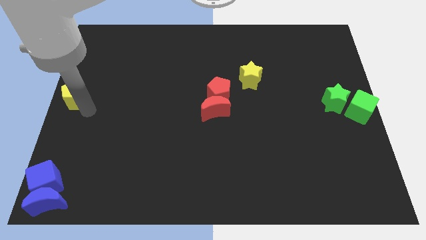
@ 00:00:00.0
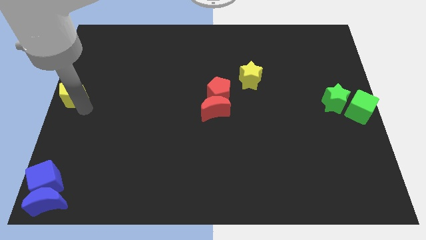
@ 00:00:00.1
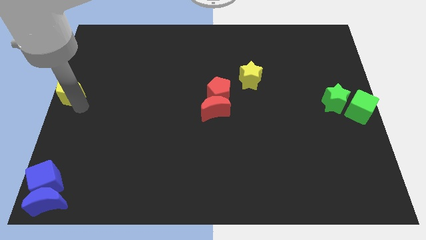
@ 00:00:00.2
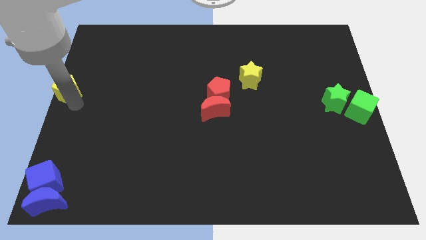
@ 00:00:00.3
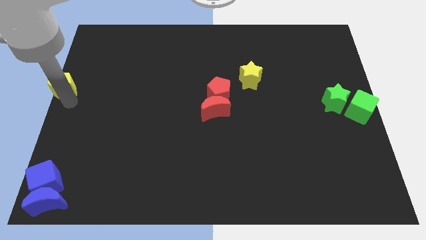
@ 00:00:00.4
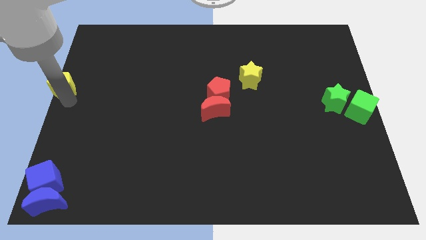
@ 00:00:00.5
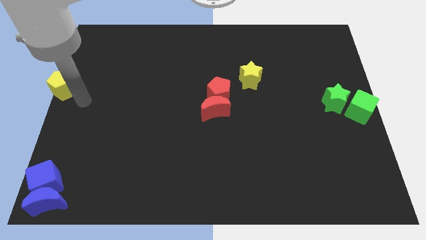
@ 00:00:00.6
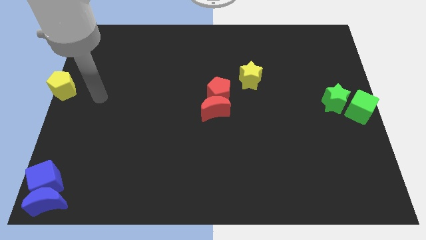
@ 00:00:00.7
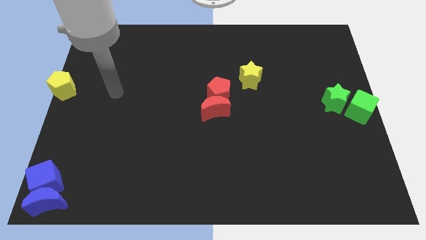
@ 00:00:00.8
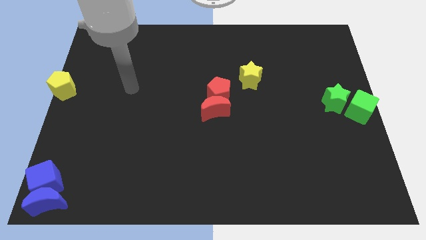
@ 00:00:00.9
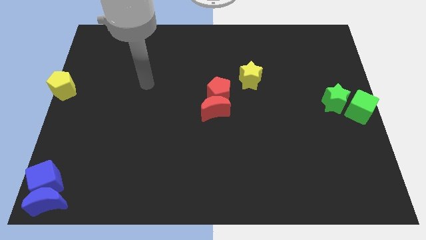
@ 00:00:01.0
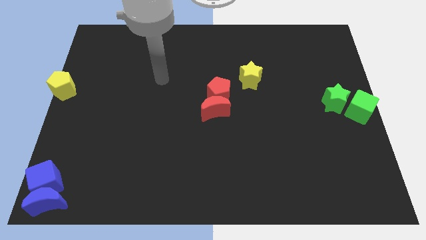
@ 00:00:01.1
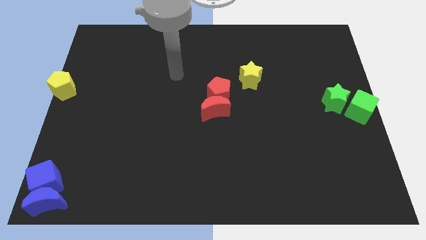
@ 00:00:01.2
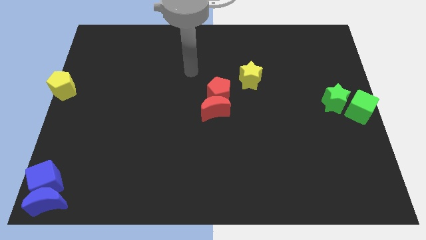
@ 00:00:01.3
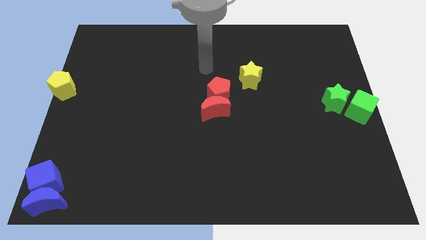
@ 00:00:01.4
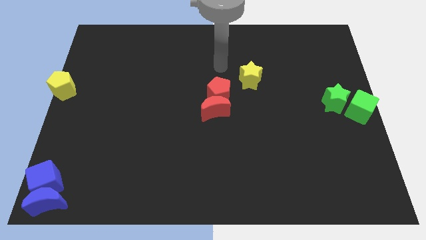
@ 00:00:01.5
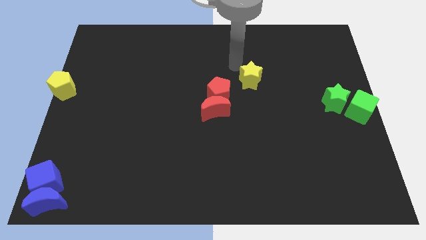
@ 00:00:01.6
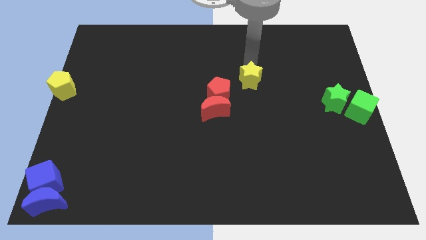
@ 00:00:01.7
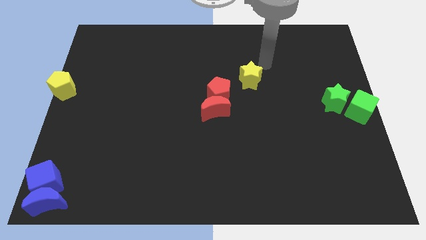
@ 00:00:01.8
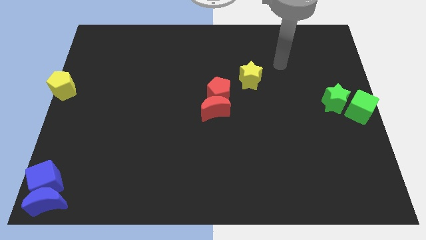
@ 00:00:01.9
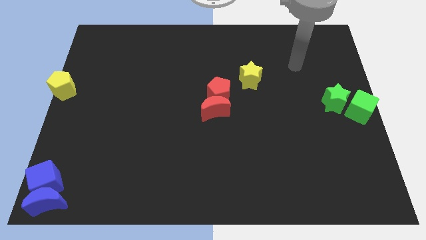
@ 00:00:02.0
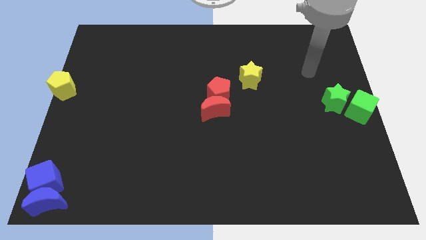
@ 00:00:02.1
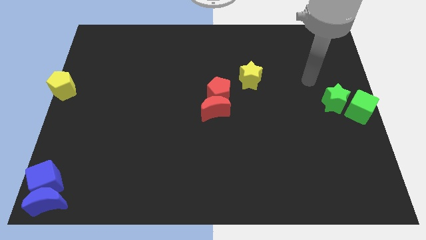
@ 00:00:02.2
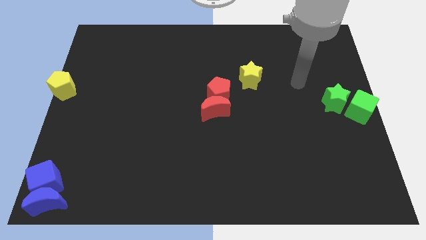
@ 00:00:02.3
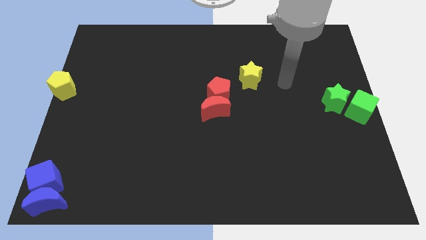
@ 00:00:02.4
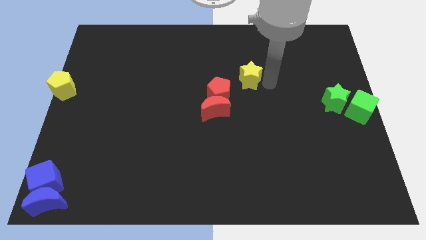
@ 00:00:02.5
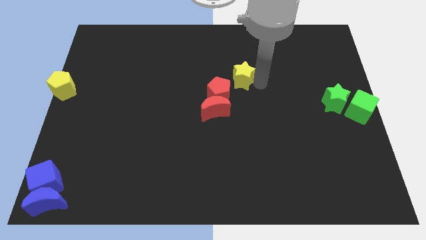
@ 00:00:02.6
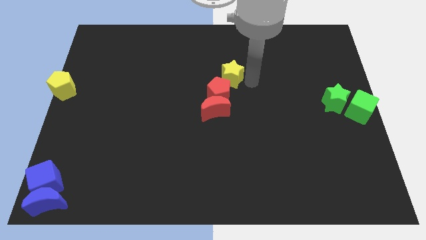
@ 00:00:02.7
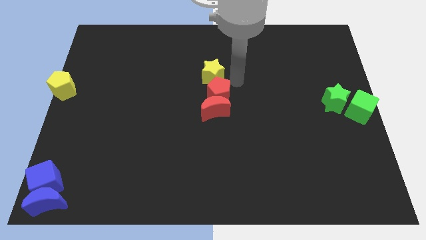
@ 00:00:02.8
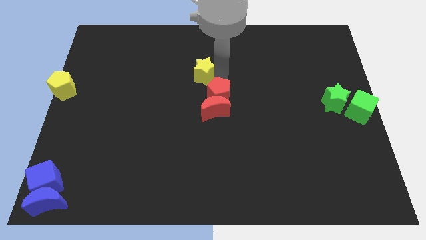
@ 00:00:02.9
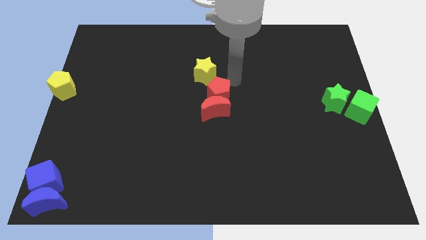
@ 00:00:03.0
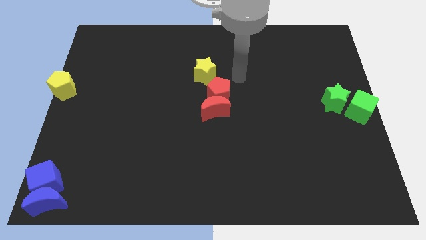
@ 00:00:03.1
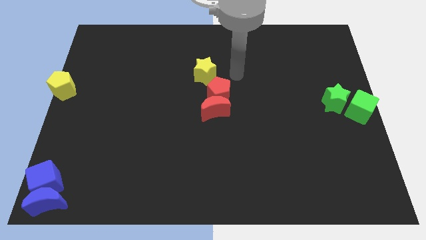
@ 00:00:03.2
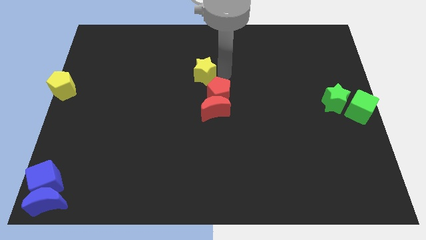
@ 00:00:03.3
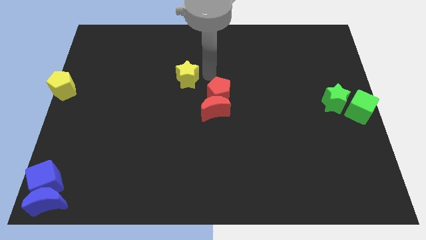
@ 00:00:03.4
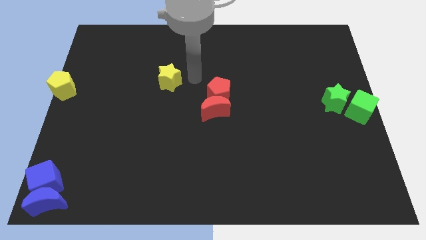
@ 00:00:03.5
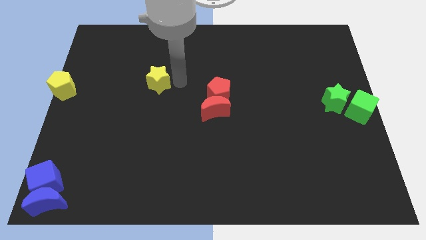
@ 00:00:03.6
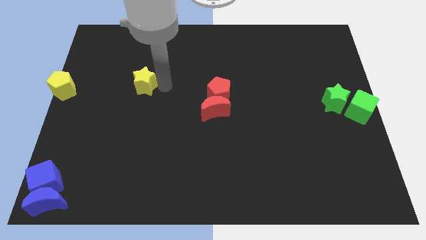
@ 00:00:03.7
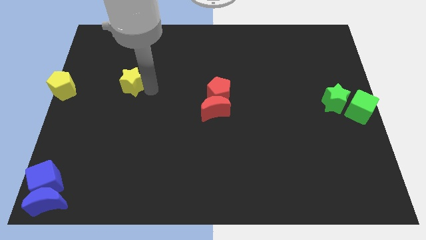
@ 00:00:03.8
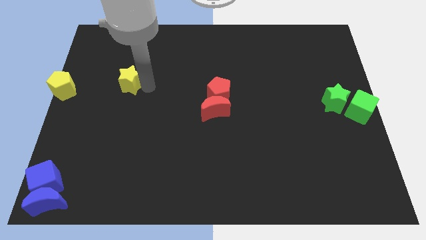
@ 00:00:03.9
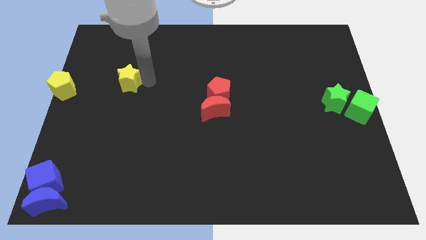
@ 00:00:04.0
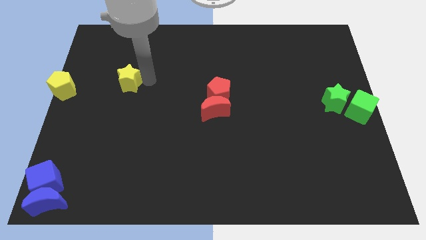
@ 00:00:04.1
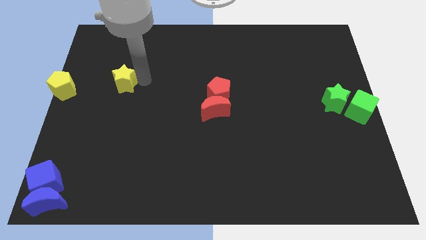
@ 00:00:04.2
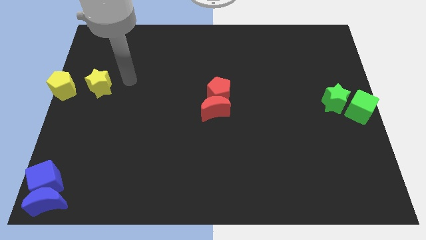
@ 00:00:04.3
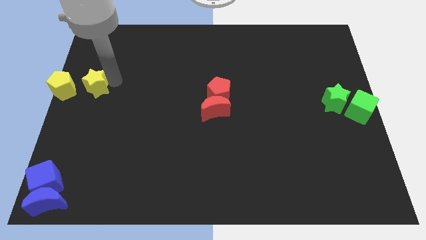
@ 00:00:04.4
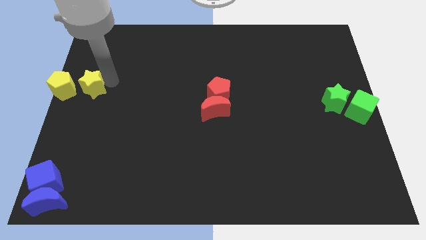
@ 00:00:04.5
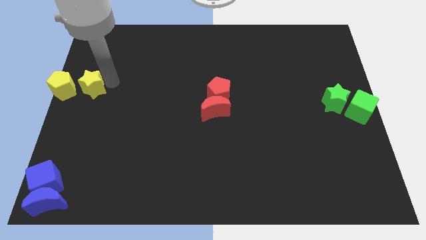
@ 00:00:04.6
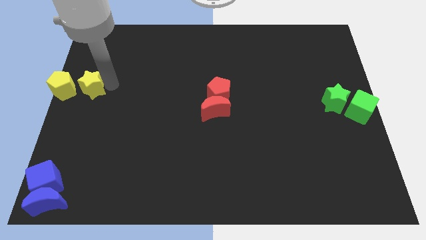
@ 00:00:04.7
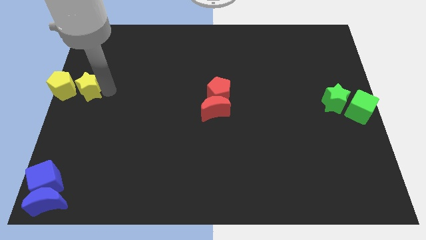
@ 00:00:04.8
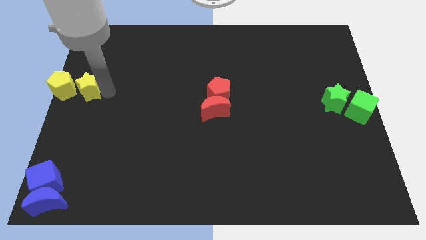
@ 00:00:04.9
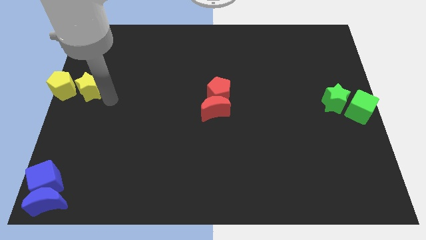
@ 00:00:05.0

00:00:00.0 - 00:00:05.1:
move the yellow star to right side of the yellow pentagon

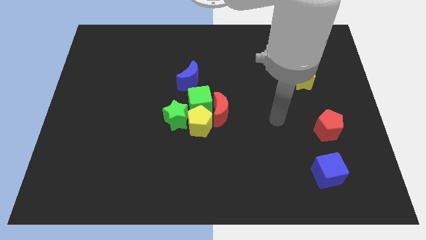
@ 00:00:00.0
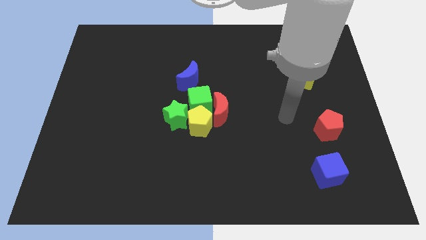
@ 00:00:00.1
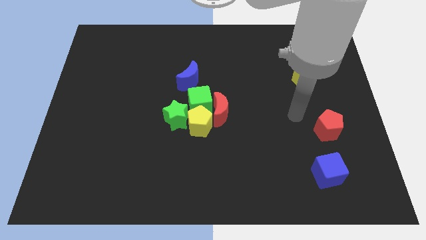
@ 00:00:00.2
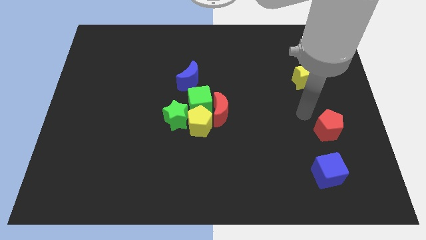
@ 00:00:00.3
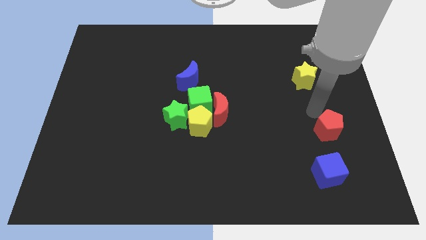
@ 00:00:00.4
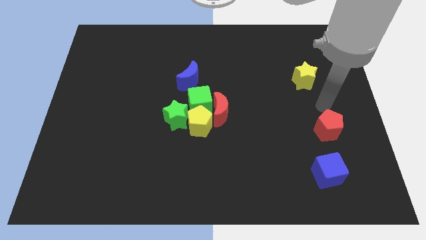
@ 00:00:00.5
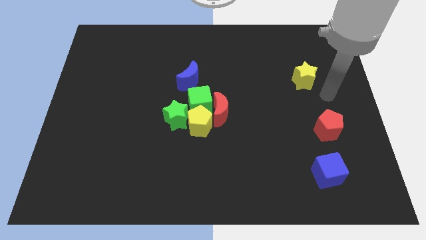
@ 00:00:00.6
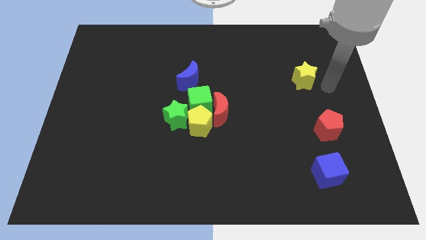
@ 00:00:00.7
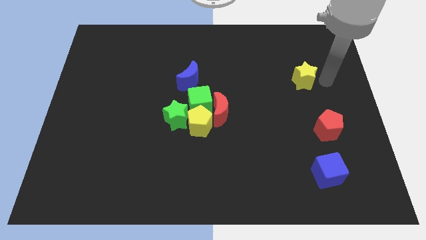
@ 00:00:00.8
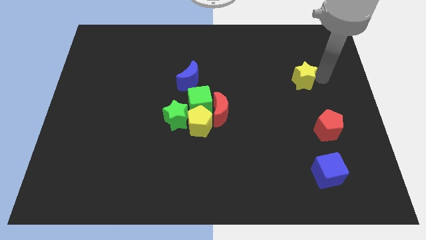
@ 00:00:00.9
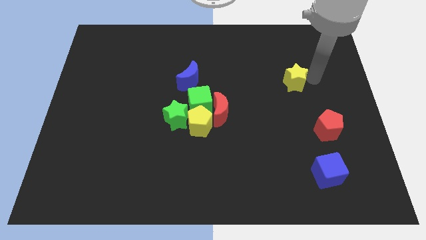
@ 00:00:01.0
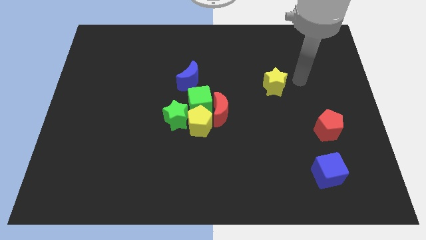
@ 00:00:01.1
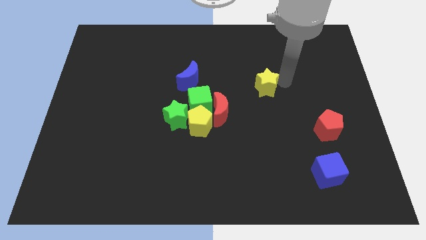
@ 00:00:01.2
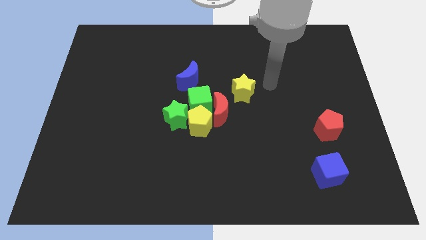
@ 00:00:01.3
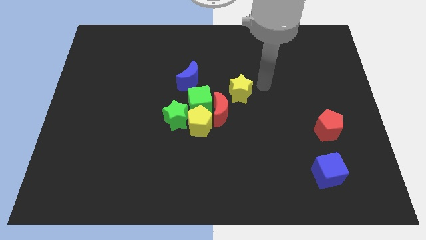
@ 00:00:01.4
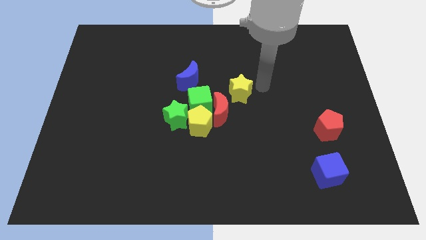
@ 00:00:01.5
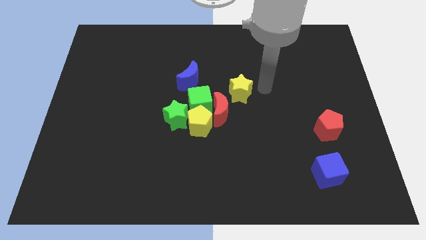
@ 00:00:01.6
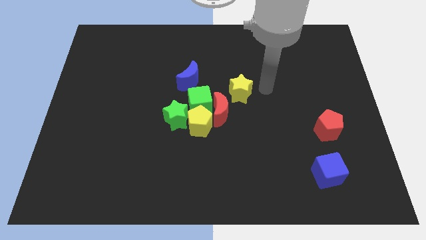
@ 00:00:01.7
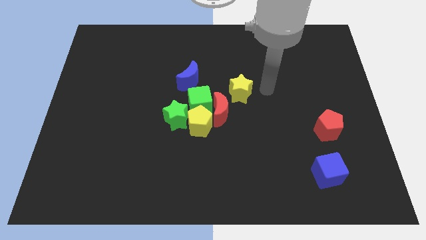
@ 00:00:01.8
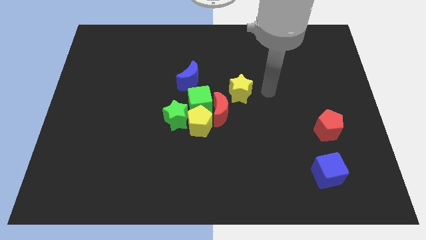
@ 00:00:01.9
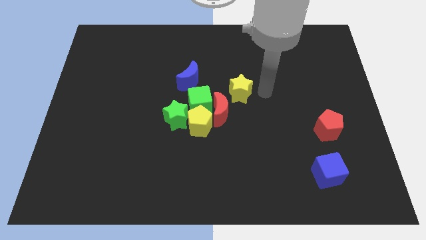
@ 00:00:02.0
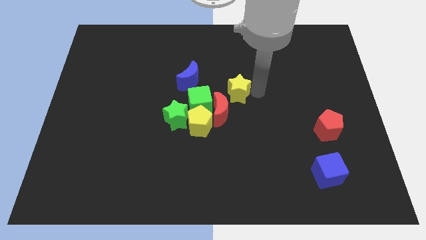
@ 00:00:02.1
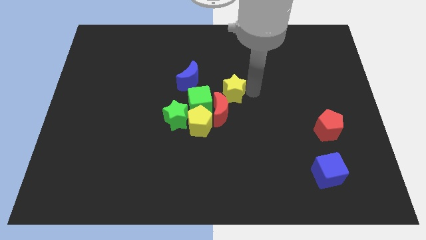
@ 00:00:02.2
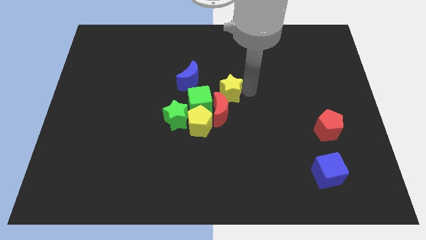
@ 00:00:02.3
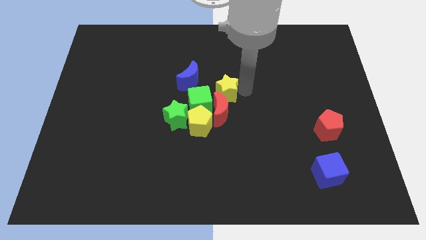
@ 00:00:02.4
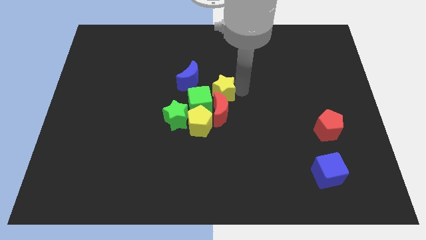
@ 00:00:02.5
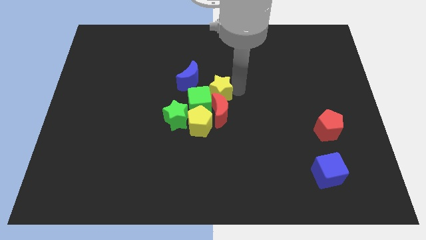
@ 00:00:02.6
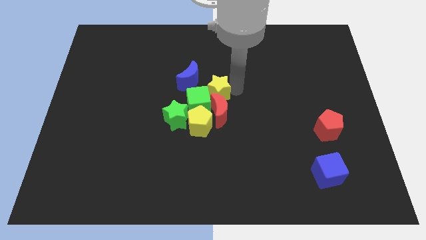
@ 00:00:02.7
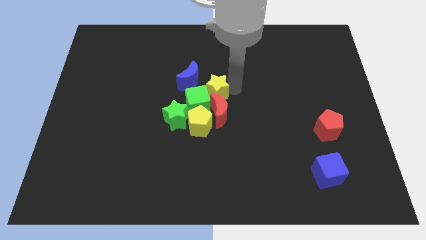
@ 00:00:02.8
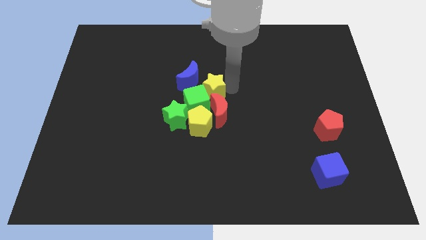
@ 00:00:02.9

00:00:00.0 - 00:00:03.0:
move the yellow star into the green cube

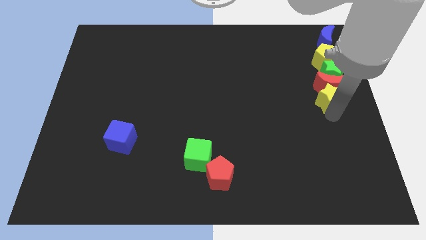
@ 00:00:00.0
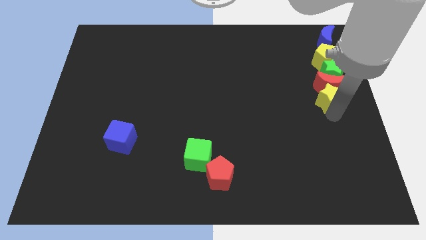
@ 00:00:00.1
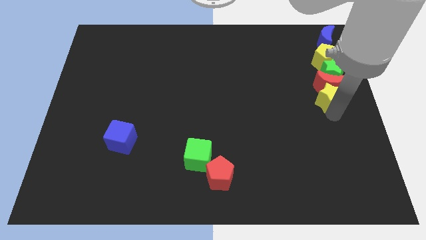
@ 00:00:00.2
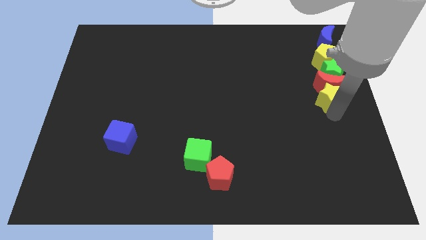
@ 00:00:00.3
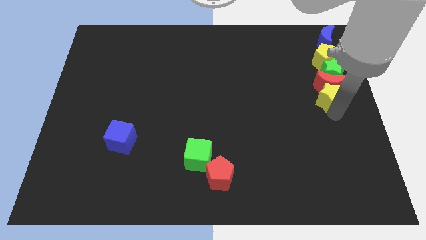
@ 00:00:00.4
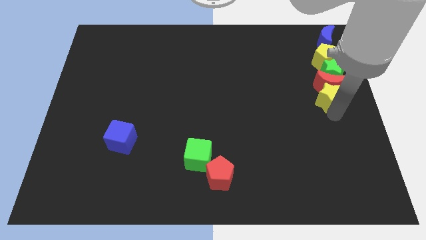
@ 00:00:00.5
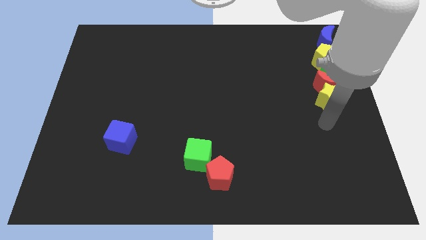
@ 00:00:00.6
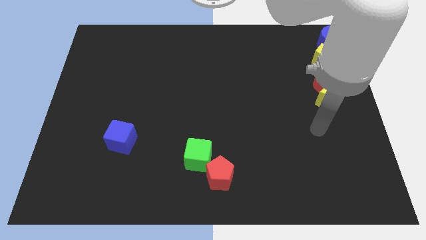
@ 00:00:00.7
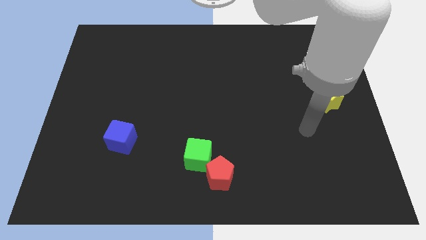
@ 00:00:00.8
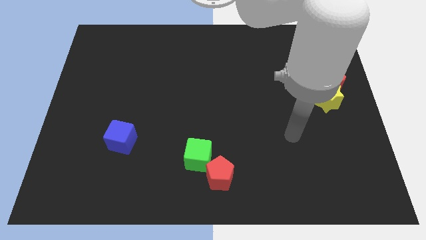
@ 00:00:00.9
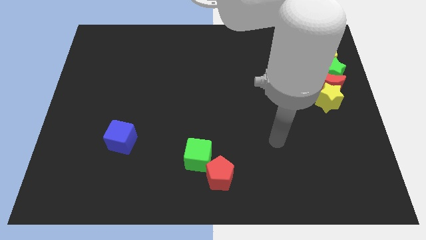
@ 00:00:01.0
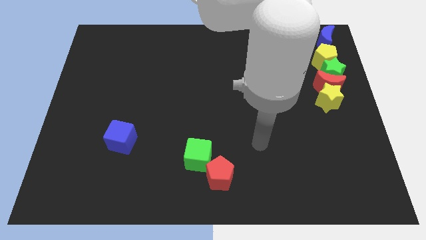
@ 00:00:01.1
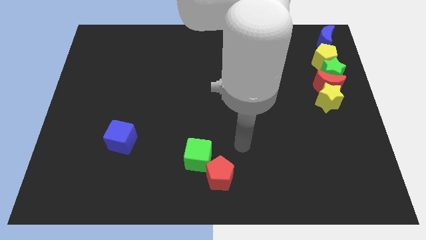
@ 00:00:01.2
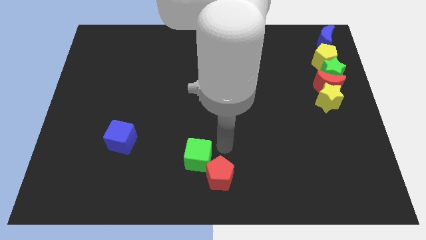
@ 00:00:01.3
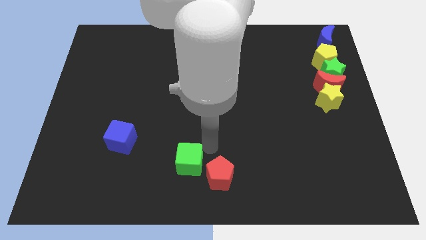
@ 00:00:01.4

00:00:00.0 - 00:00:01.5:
move away from the yellow star
